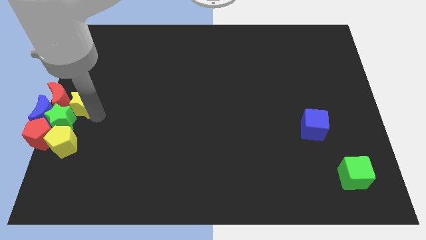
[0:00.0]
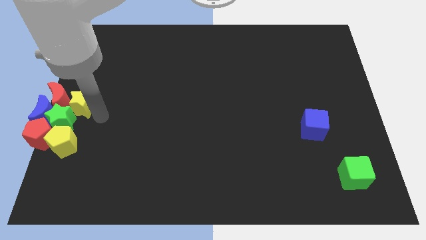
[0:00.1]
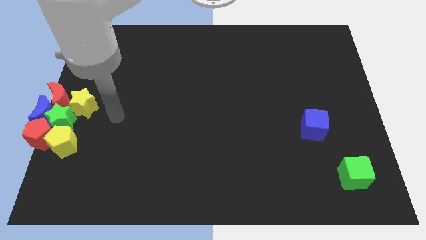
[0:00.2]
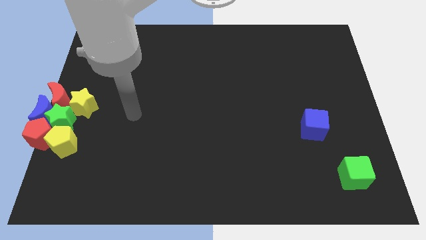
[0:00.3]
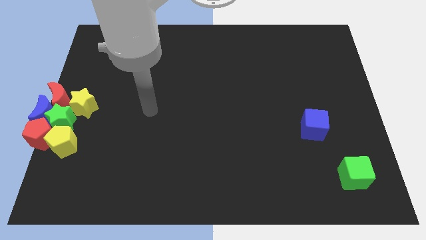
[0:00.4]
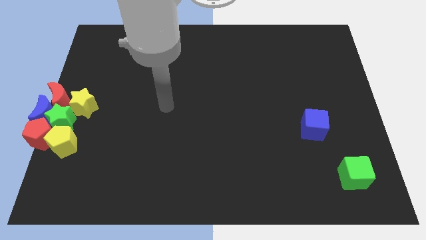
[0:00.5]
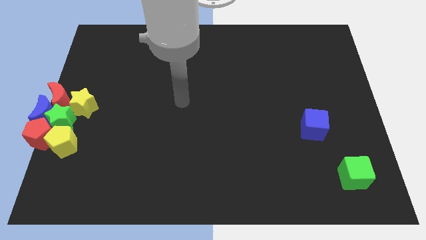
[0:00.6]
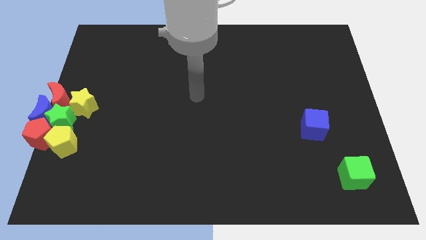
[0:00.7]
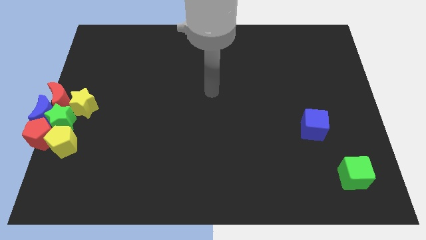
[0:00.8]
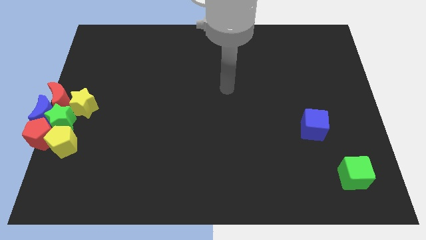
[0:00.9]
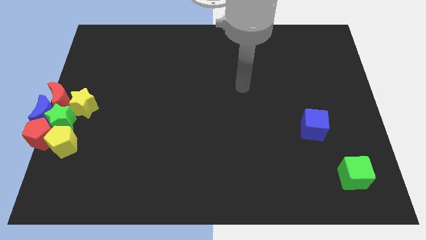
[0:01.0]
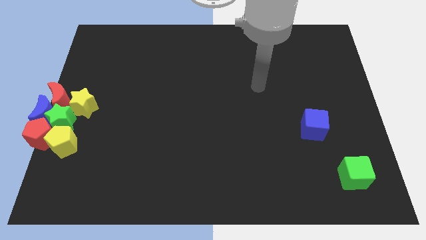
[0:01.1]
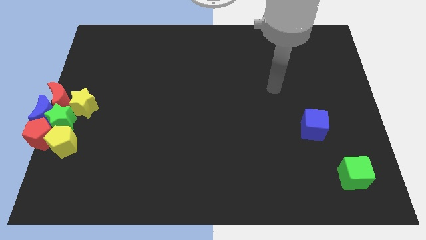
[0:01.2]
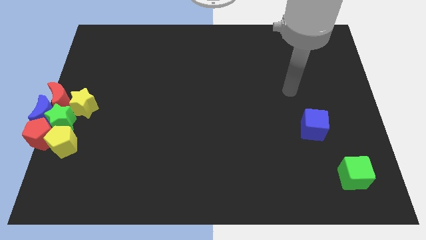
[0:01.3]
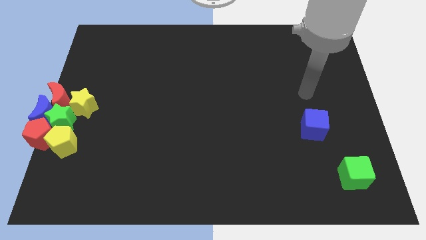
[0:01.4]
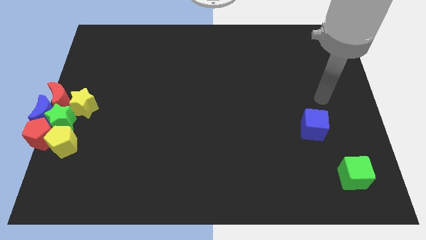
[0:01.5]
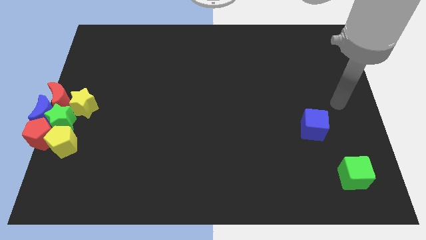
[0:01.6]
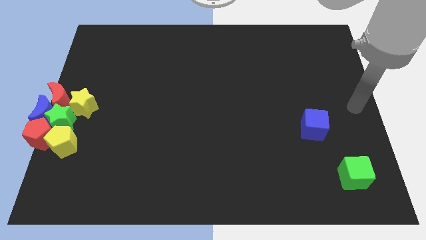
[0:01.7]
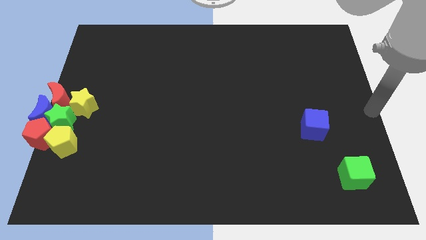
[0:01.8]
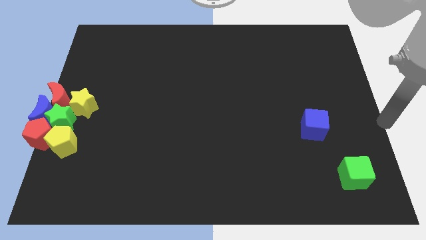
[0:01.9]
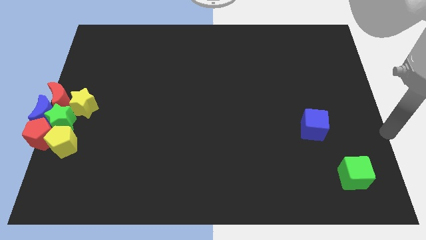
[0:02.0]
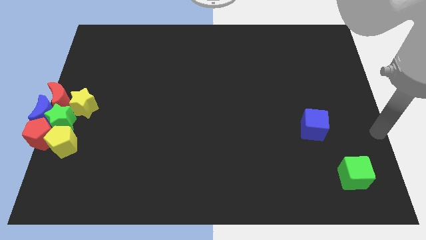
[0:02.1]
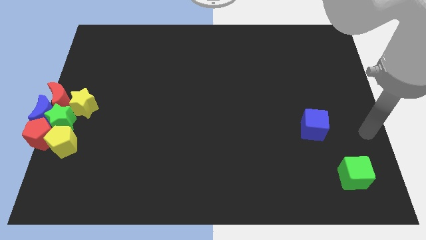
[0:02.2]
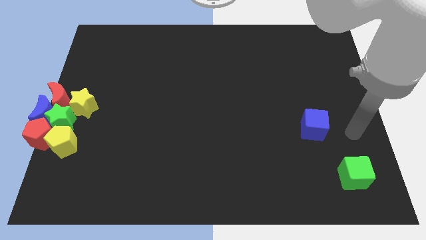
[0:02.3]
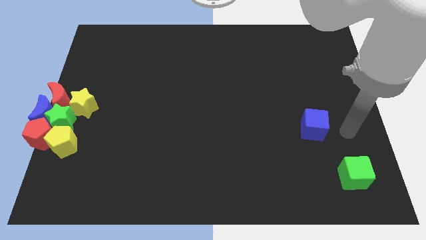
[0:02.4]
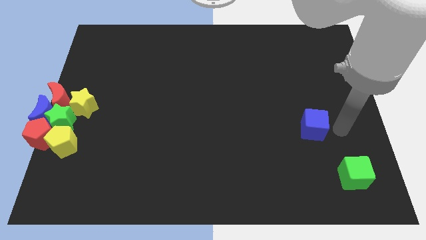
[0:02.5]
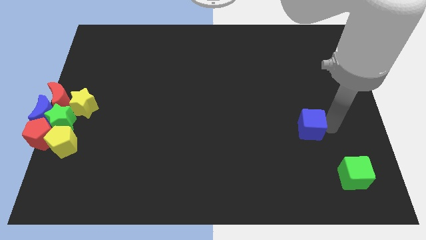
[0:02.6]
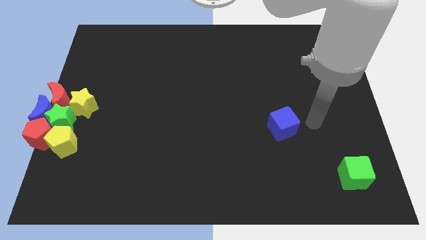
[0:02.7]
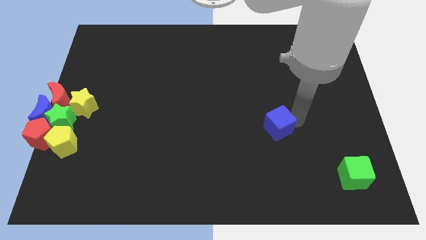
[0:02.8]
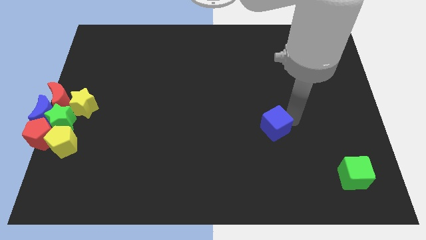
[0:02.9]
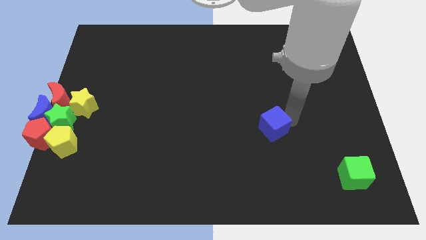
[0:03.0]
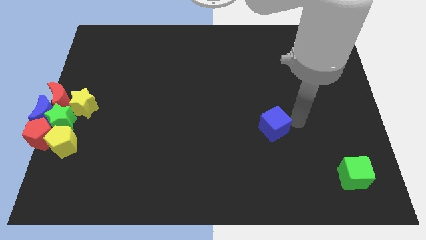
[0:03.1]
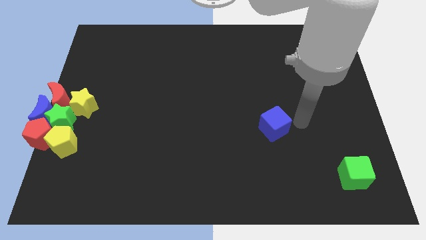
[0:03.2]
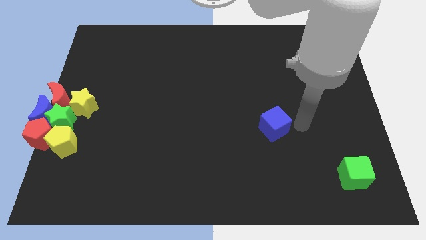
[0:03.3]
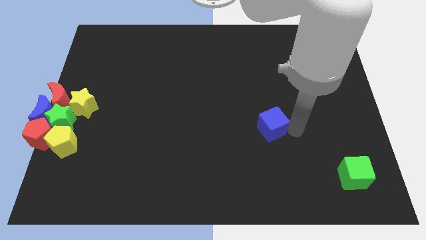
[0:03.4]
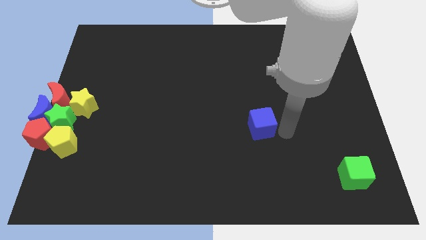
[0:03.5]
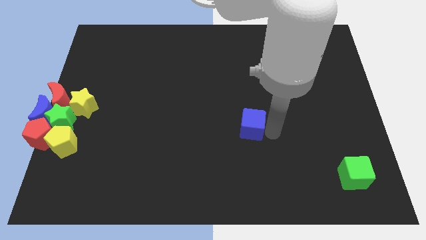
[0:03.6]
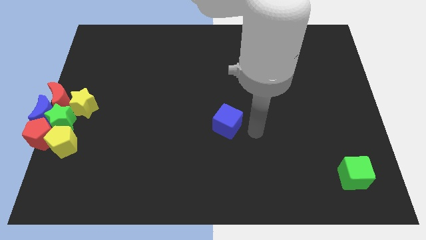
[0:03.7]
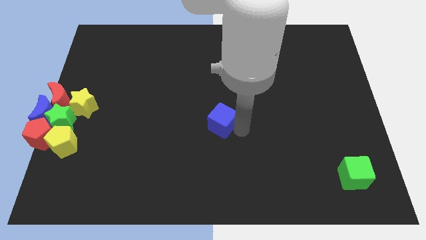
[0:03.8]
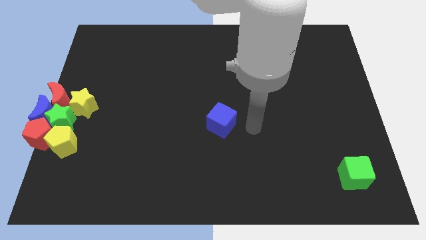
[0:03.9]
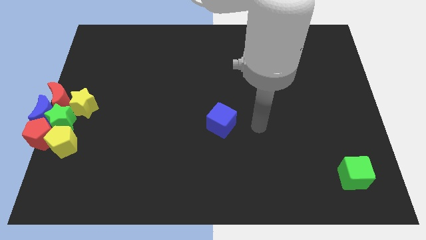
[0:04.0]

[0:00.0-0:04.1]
place blue cube to the center of the board

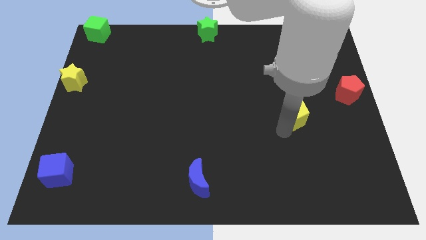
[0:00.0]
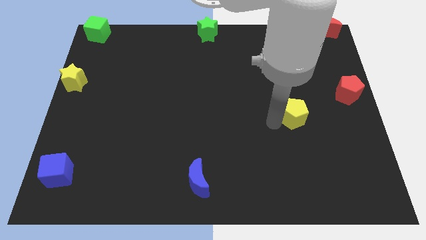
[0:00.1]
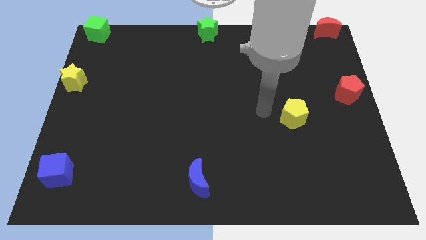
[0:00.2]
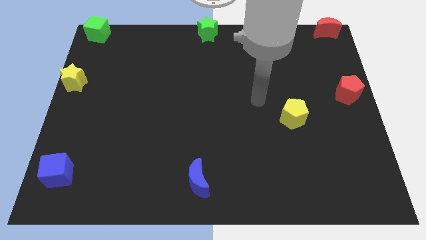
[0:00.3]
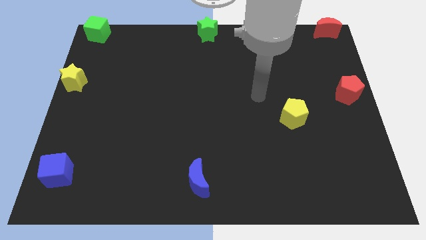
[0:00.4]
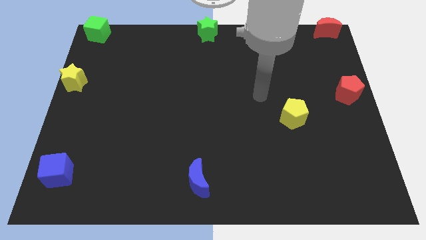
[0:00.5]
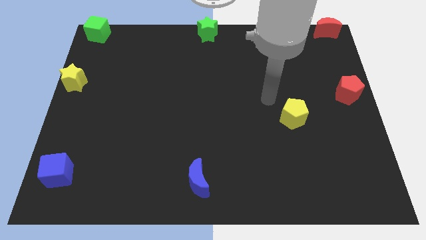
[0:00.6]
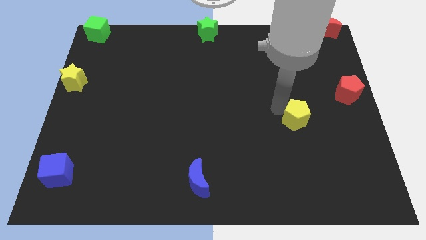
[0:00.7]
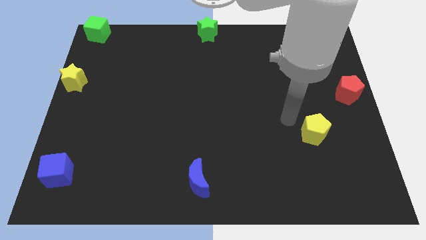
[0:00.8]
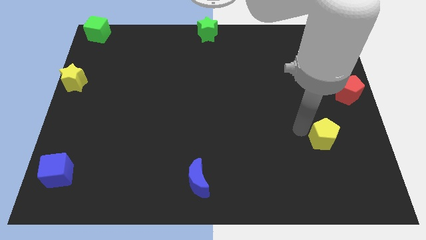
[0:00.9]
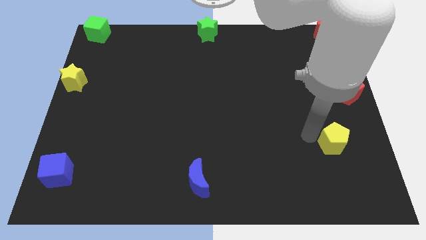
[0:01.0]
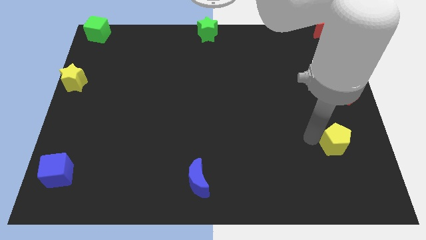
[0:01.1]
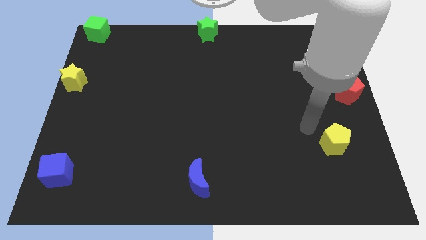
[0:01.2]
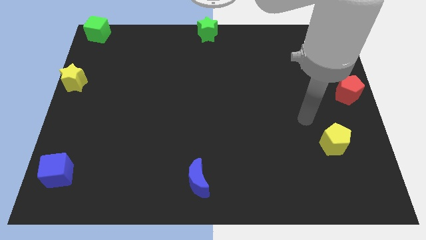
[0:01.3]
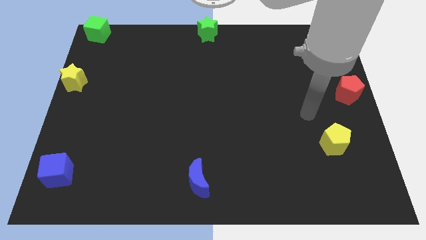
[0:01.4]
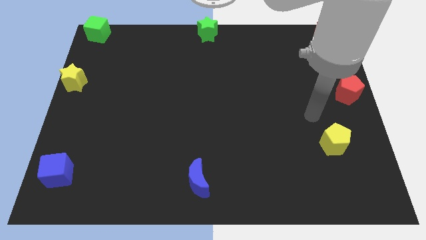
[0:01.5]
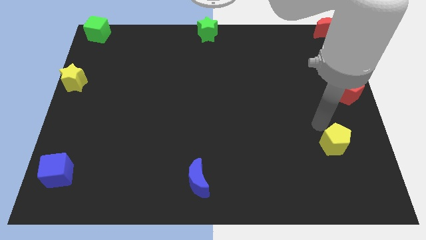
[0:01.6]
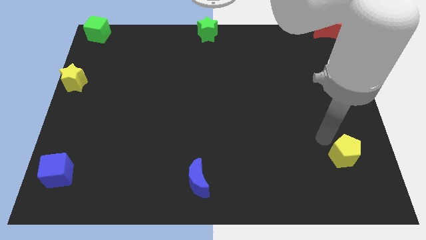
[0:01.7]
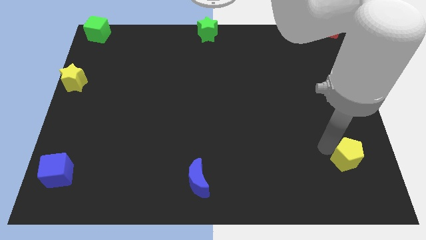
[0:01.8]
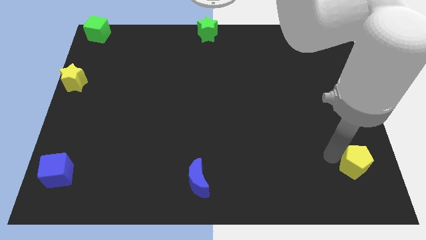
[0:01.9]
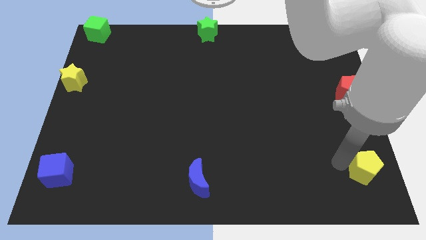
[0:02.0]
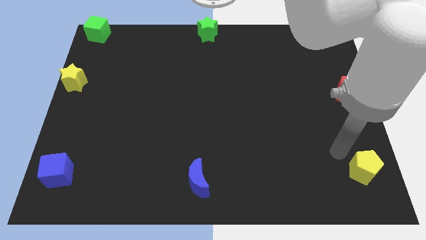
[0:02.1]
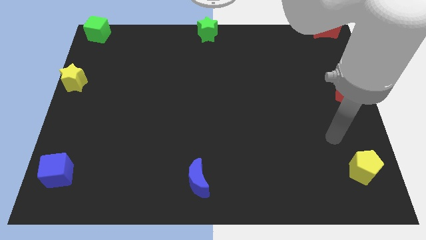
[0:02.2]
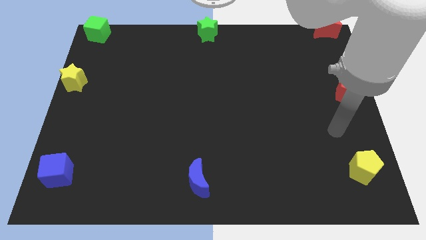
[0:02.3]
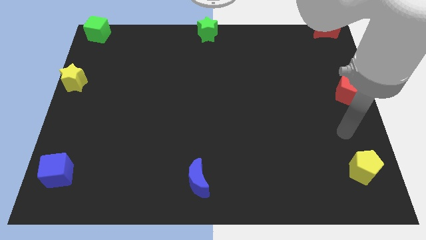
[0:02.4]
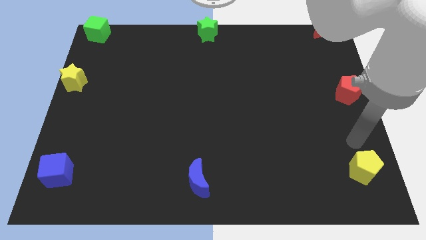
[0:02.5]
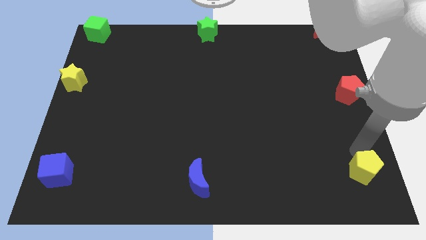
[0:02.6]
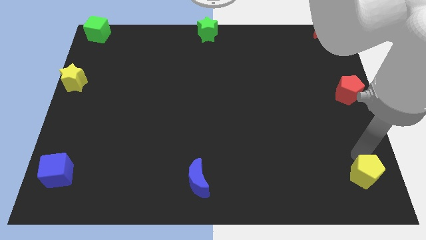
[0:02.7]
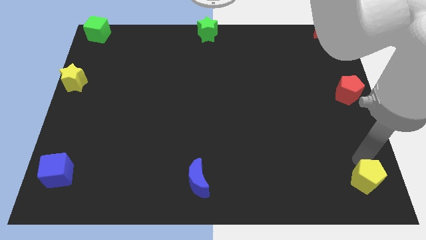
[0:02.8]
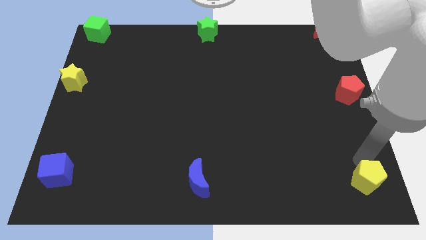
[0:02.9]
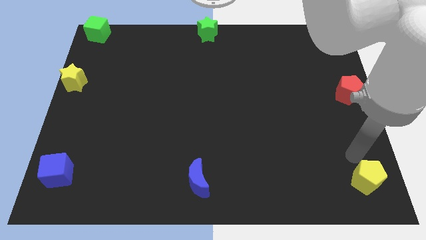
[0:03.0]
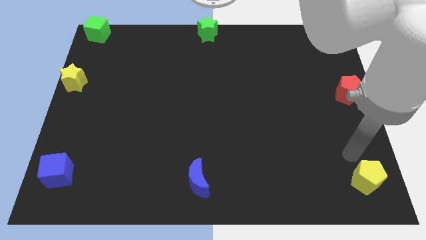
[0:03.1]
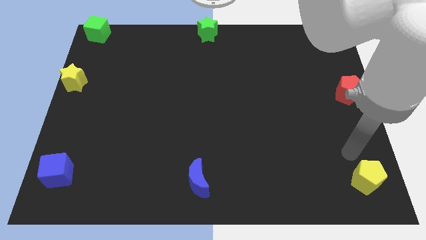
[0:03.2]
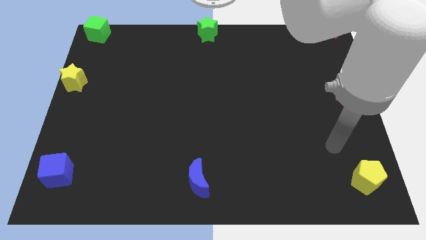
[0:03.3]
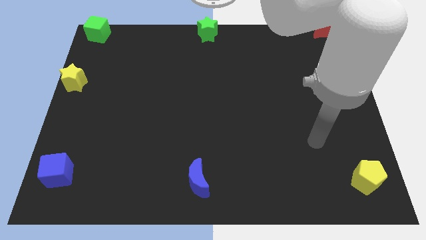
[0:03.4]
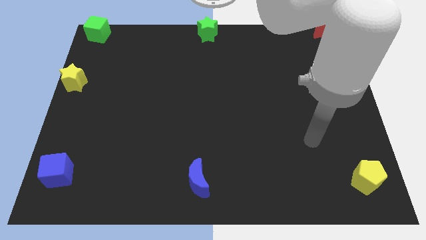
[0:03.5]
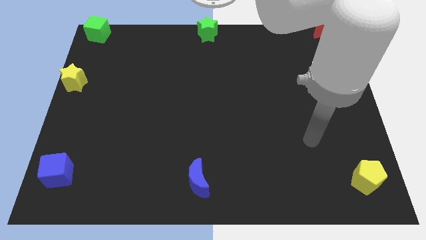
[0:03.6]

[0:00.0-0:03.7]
place the yellow pentagon toward the bottom right corner

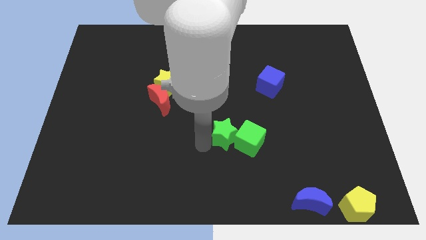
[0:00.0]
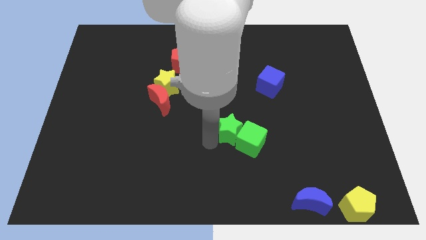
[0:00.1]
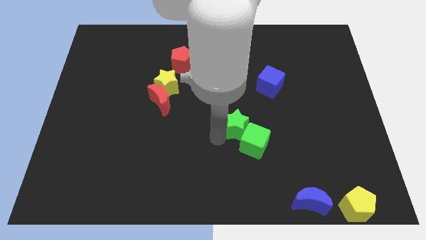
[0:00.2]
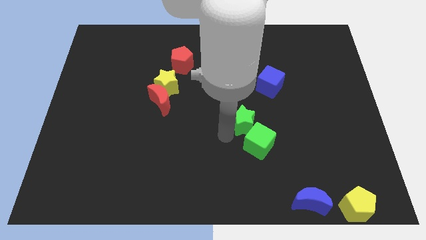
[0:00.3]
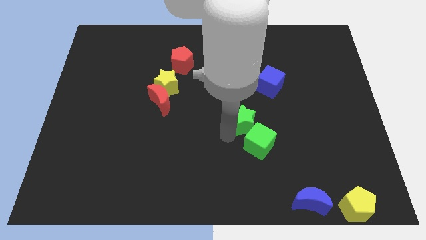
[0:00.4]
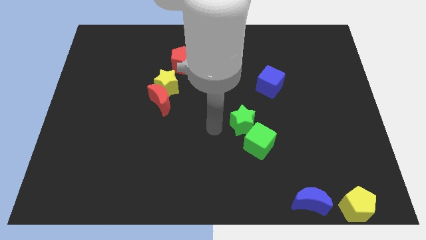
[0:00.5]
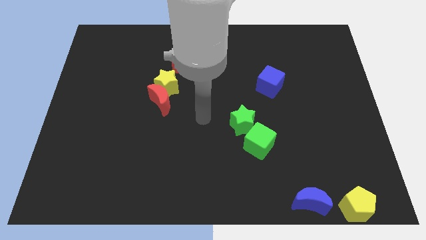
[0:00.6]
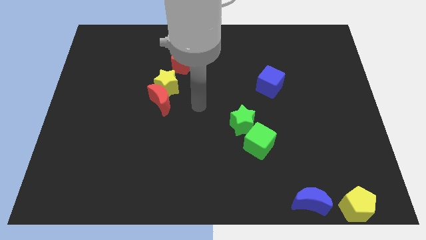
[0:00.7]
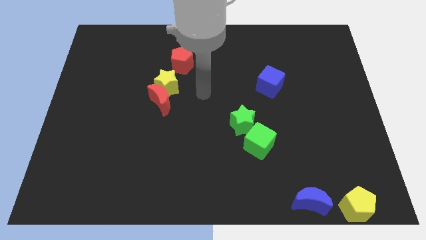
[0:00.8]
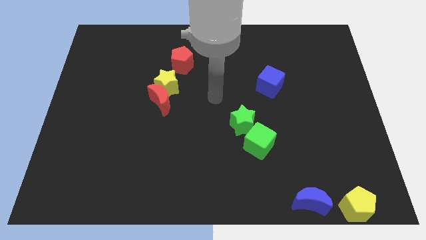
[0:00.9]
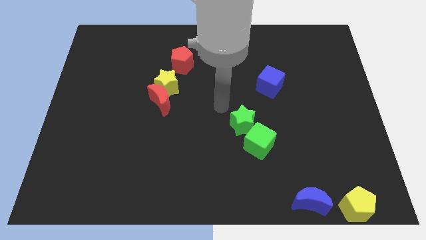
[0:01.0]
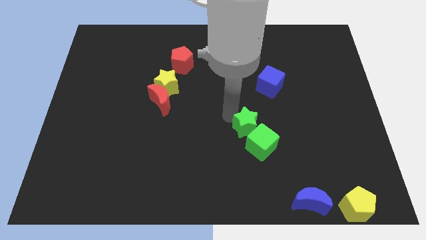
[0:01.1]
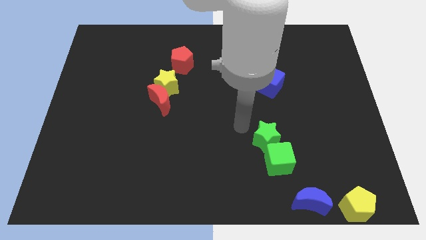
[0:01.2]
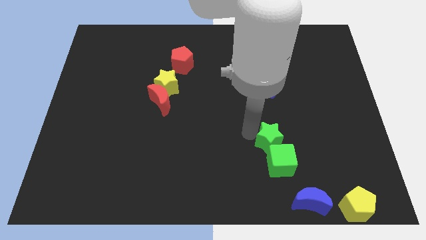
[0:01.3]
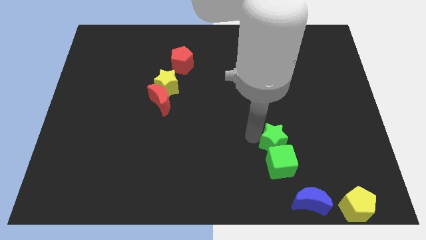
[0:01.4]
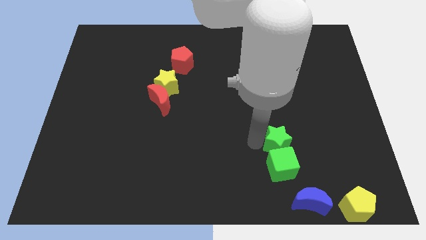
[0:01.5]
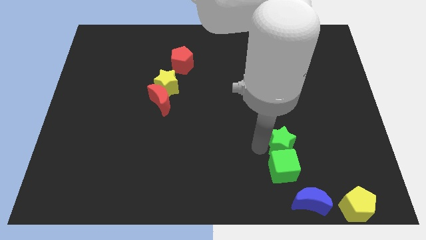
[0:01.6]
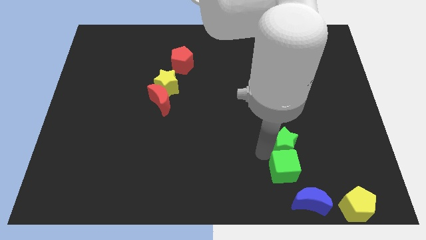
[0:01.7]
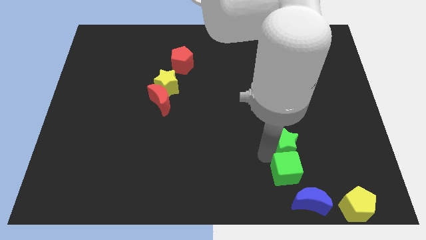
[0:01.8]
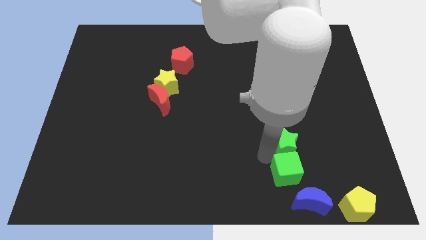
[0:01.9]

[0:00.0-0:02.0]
slide green cube and the green star vertically below the blue cube
